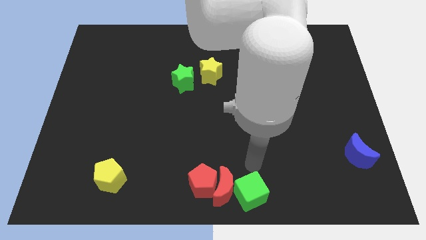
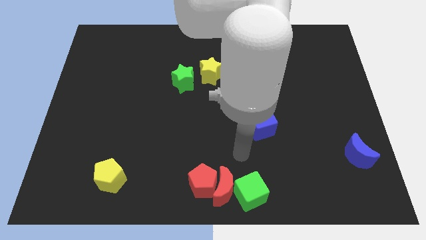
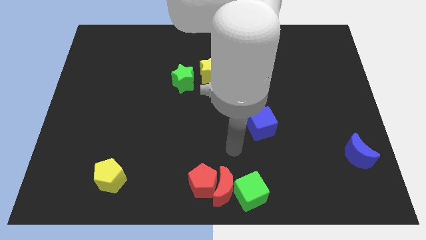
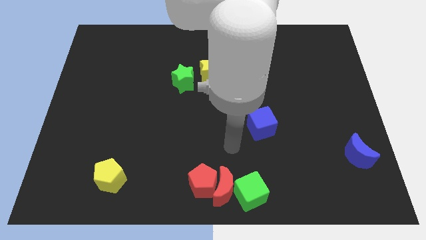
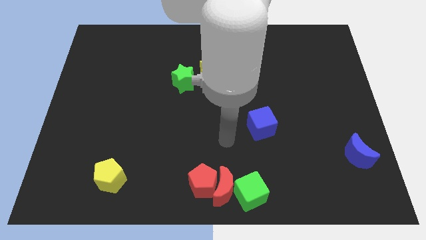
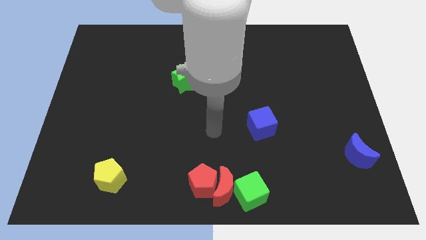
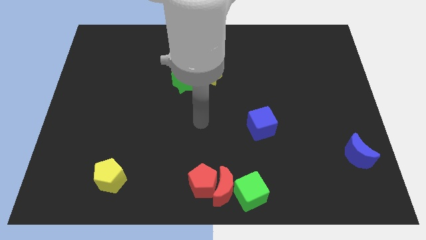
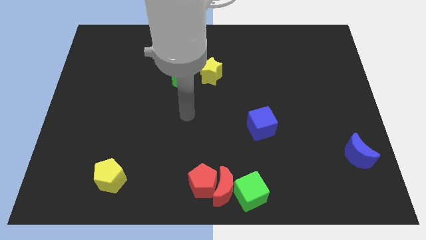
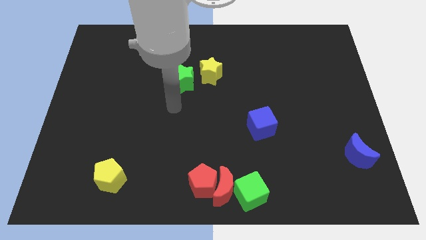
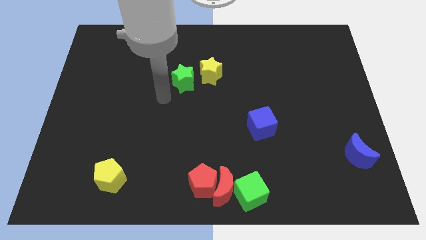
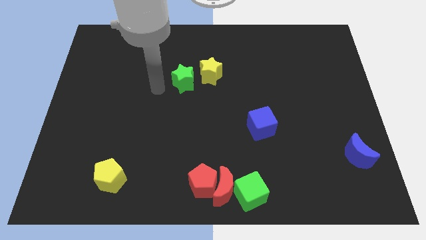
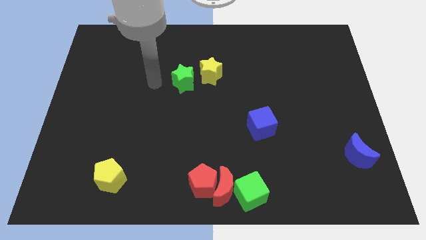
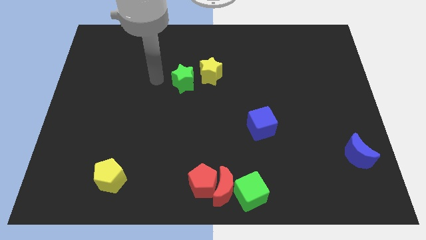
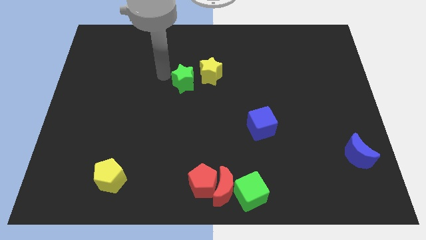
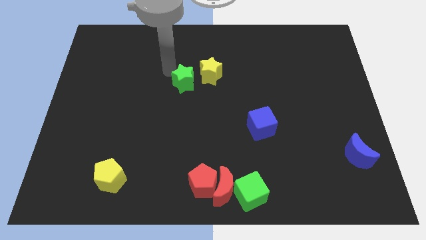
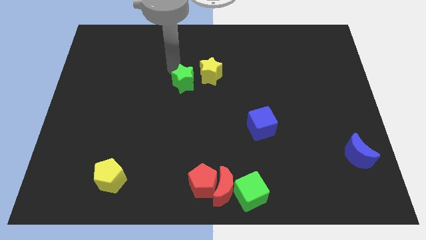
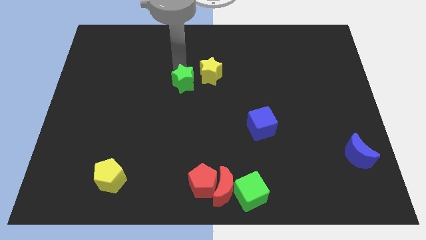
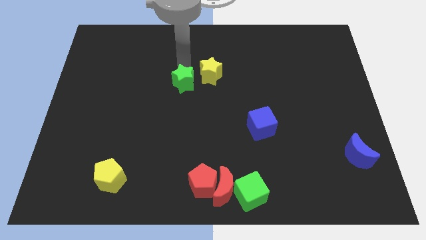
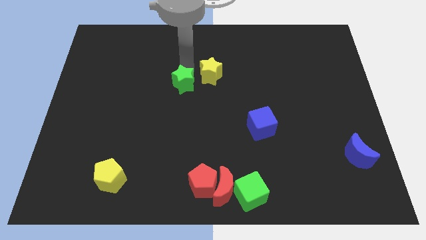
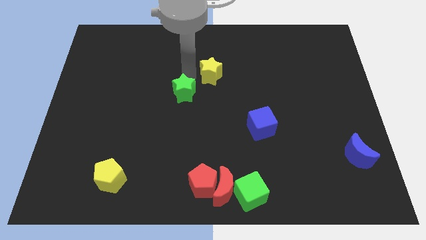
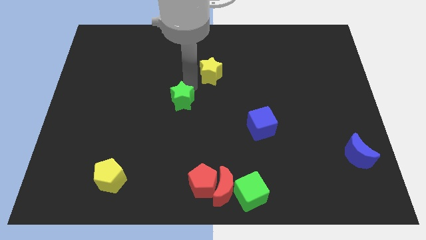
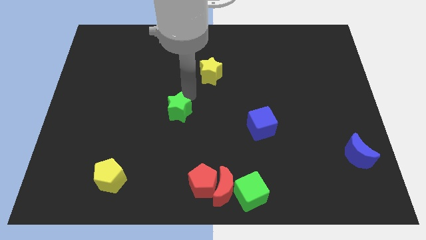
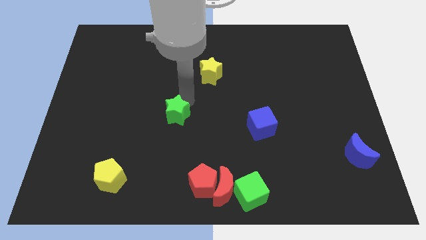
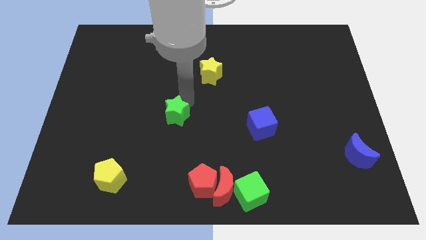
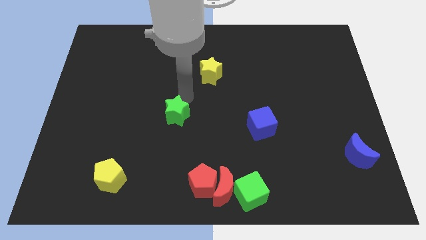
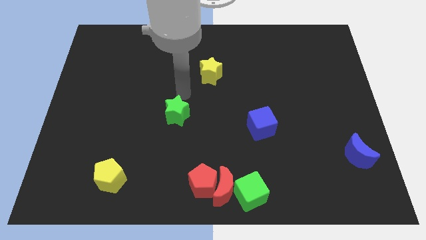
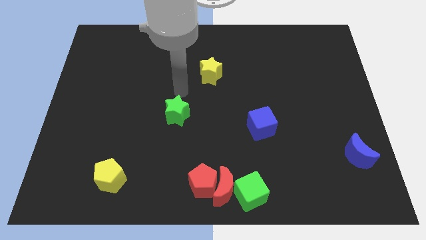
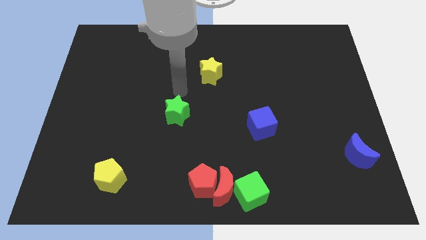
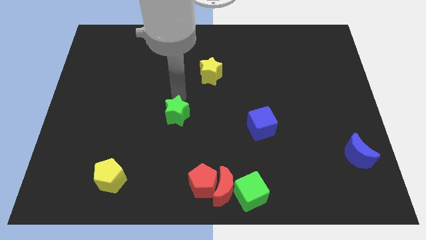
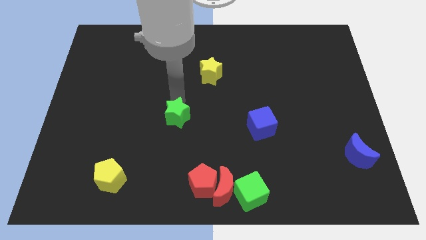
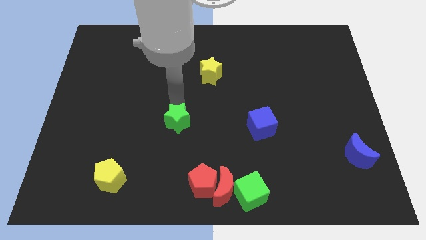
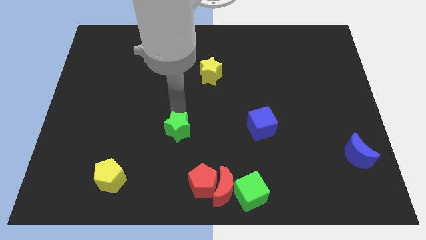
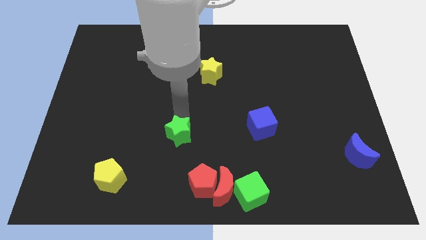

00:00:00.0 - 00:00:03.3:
push the green star towards the red pentagon

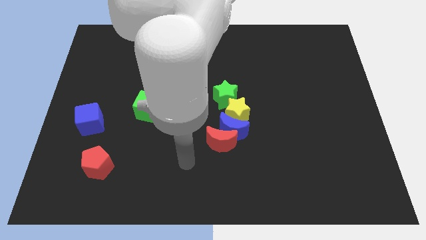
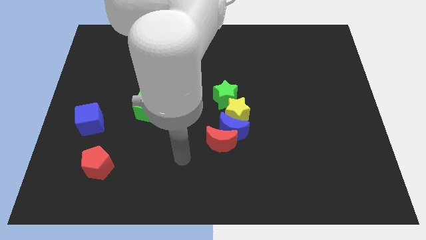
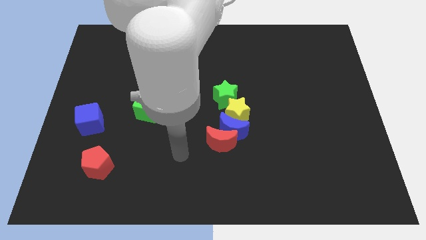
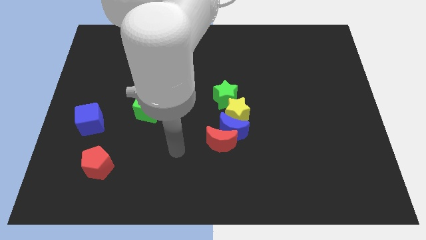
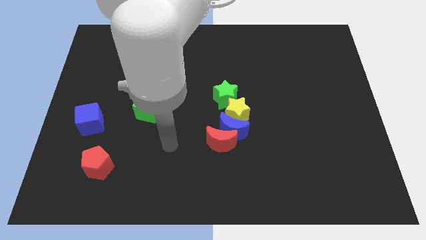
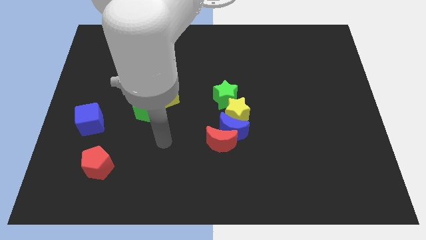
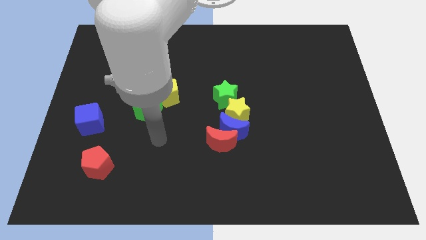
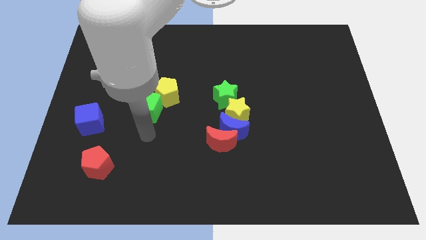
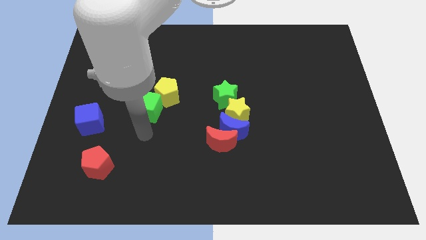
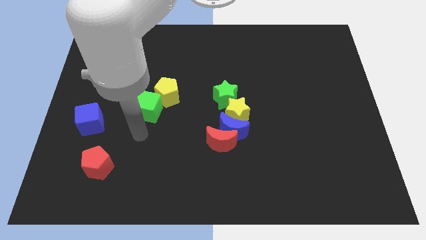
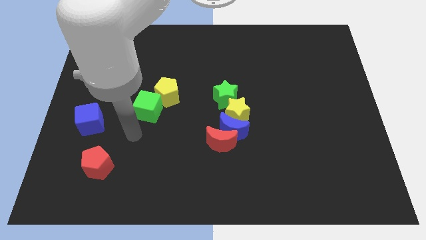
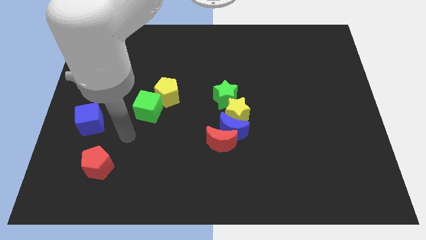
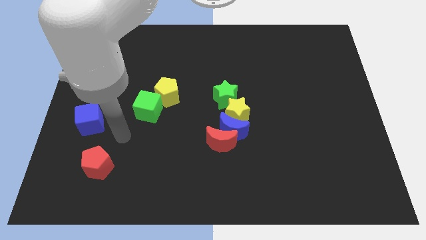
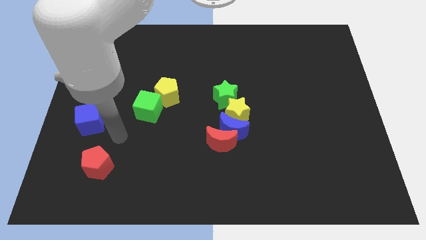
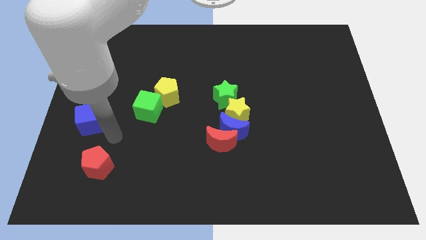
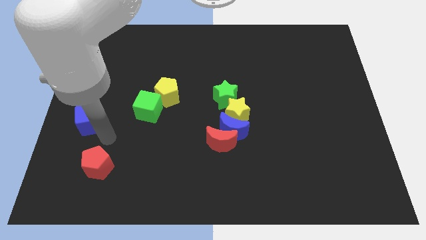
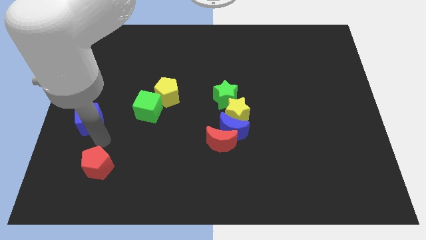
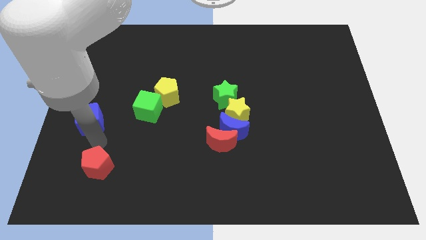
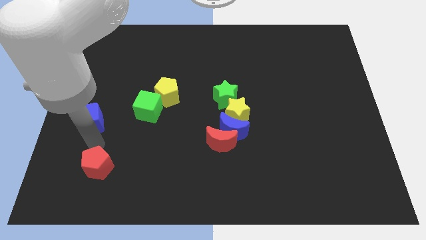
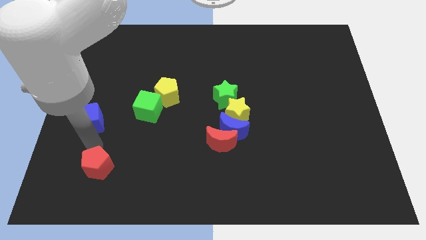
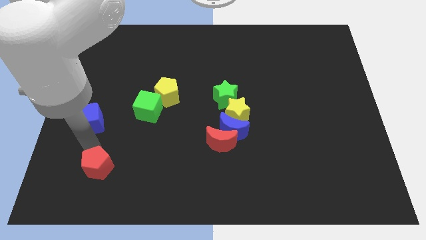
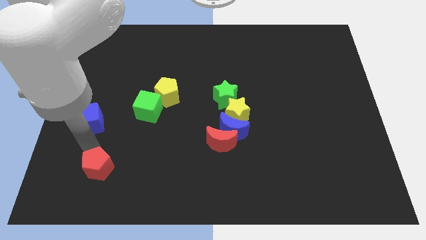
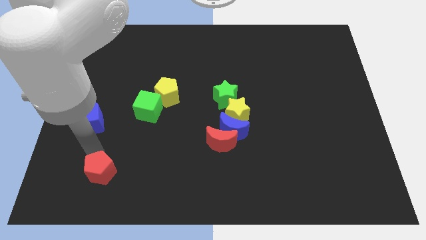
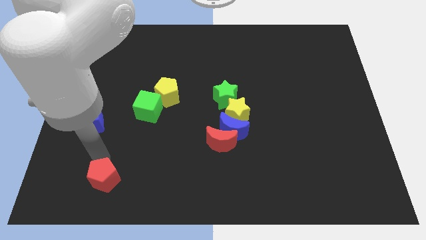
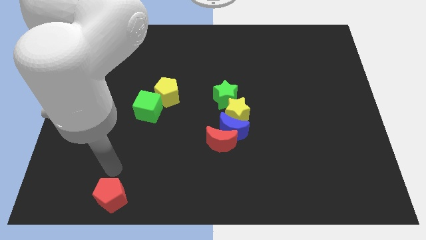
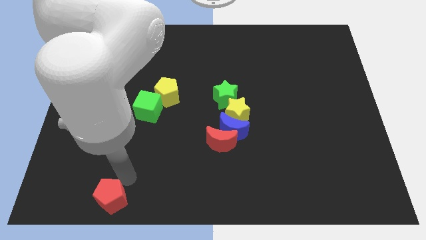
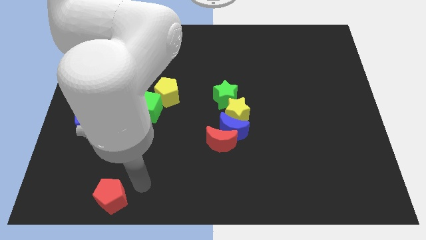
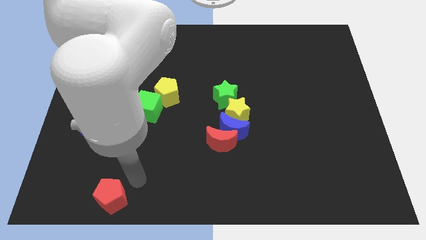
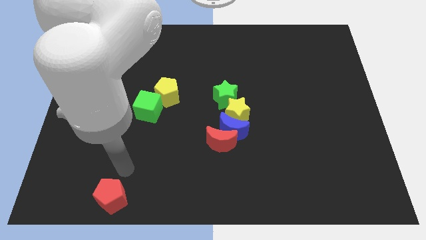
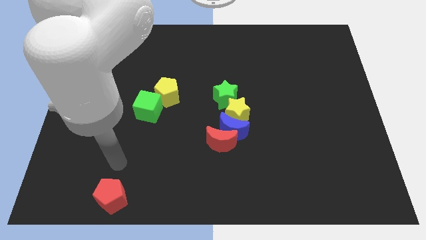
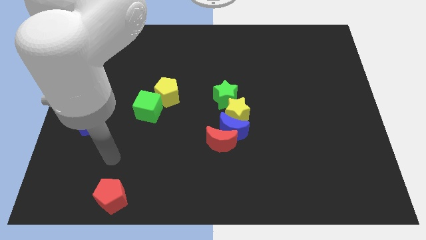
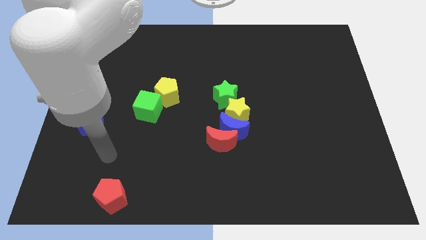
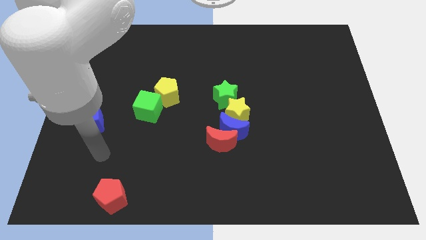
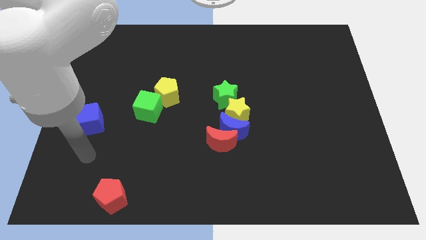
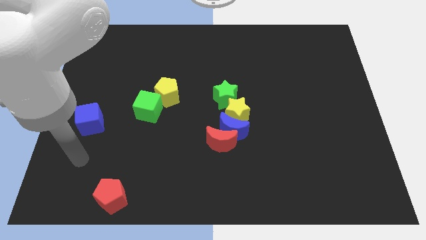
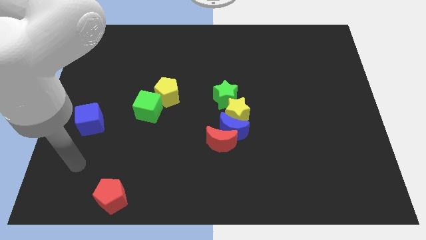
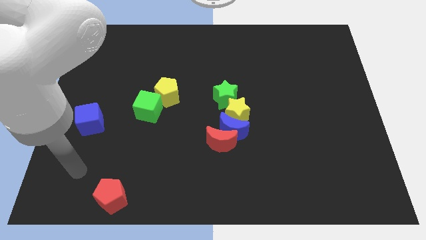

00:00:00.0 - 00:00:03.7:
hit the red pentagon towards the bottom side of the board

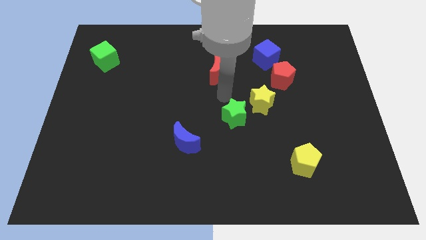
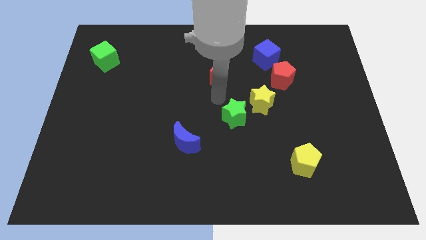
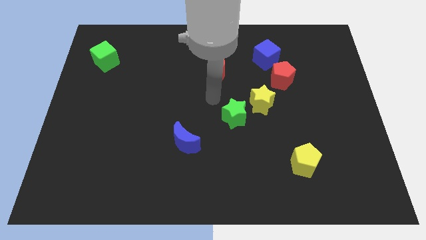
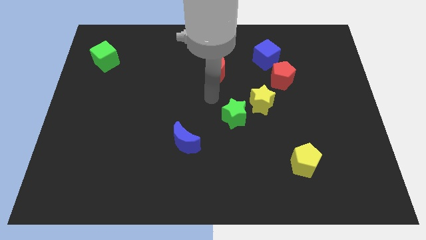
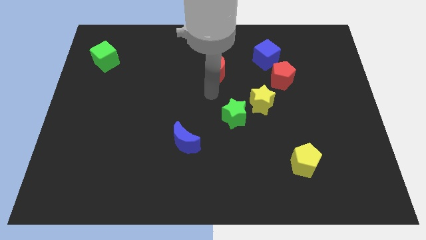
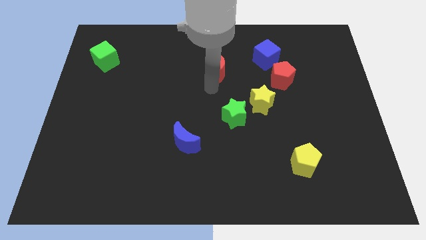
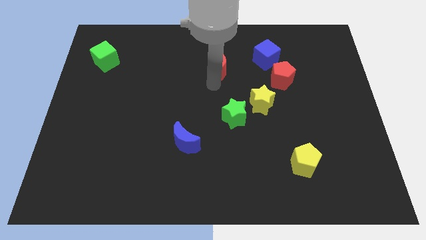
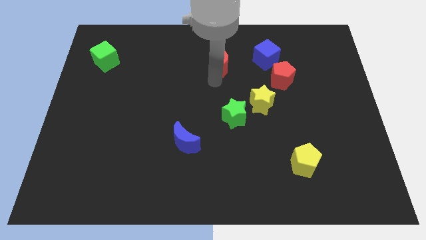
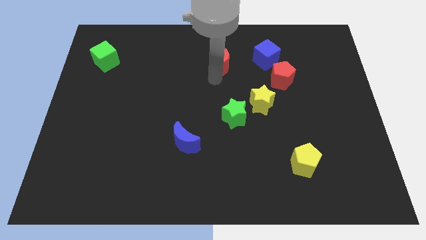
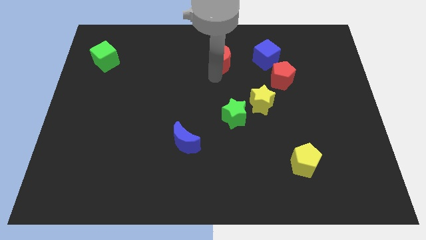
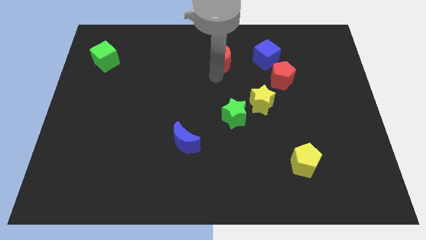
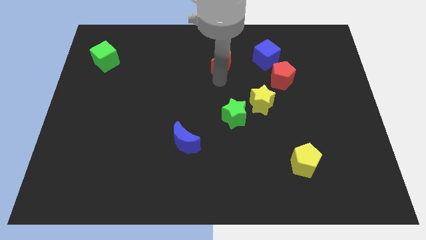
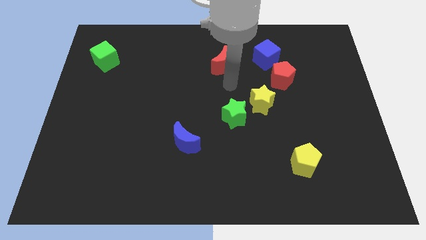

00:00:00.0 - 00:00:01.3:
push the red crescent slightly to the top

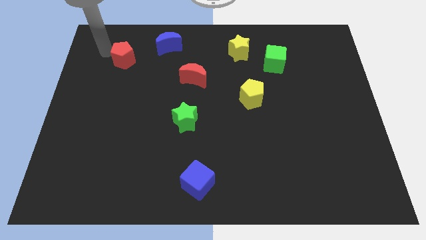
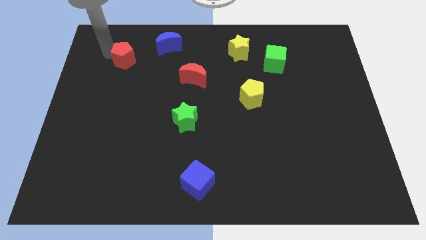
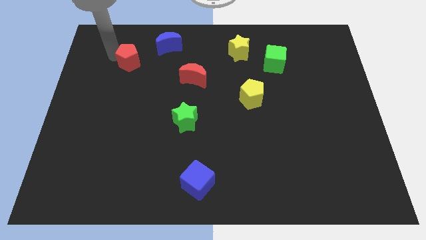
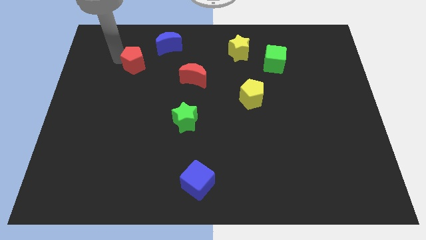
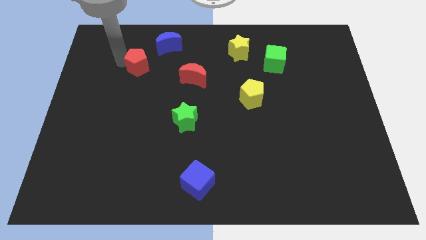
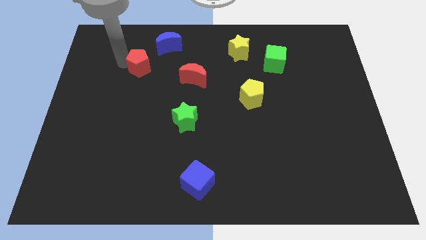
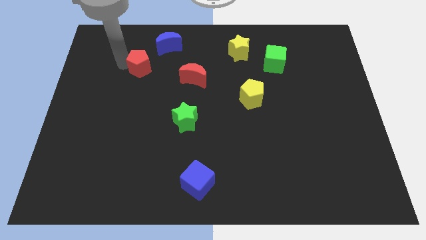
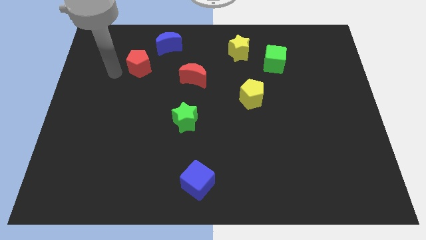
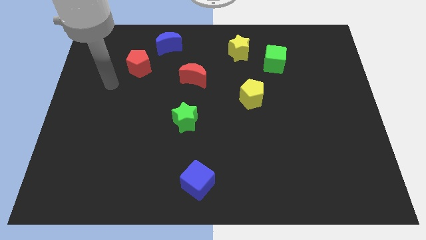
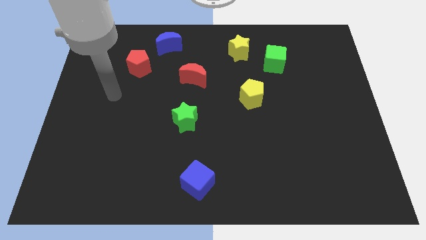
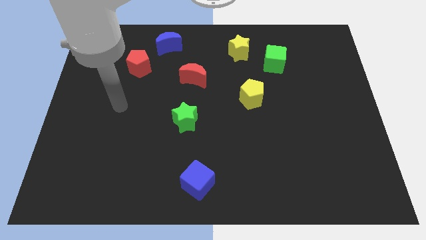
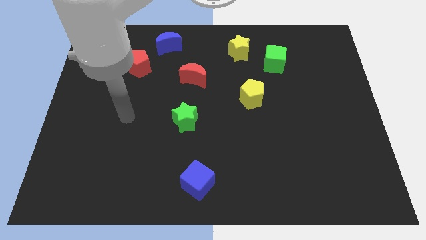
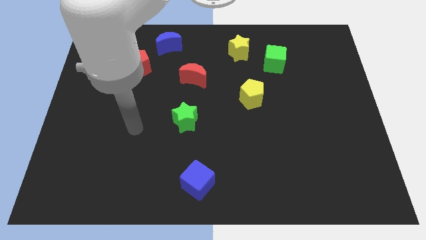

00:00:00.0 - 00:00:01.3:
move the red pentagon to the bottom left side of the blue moon
